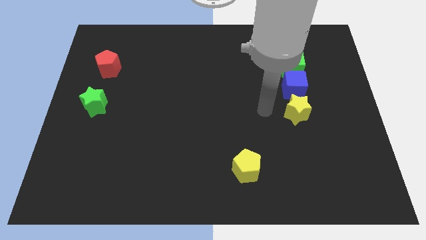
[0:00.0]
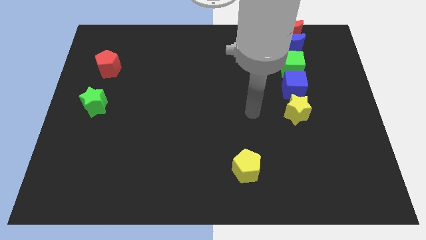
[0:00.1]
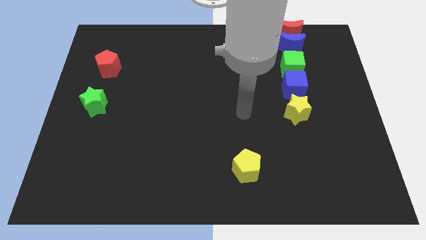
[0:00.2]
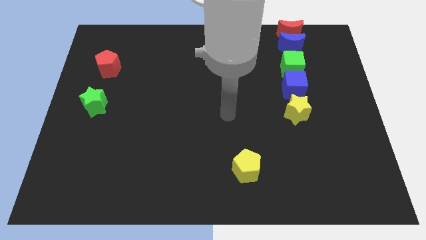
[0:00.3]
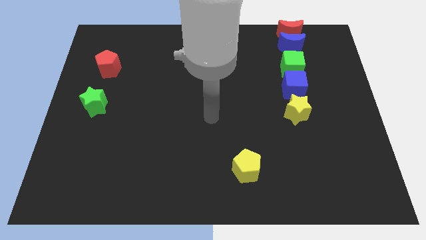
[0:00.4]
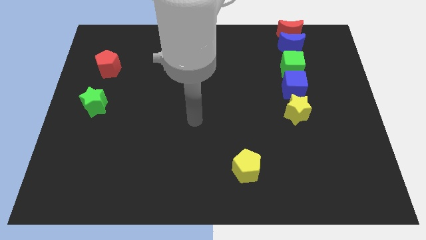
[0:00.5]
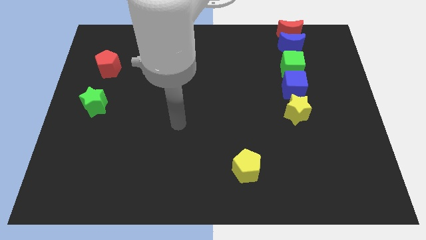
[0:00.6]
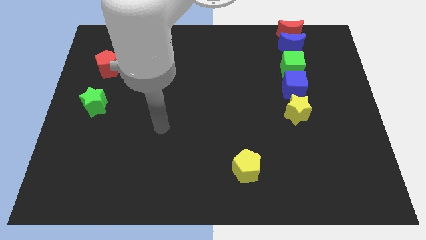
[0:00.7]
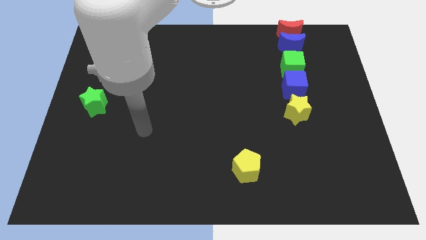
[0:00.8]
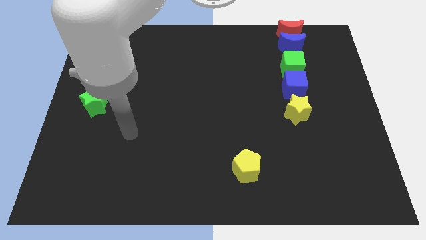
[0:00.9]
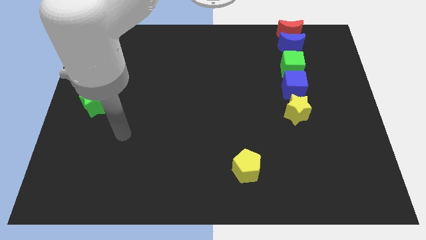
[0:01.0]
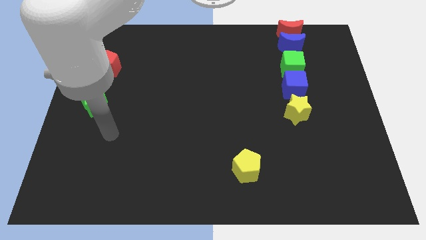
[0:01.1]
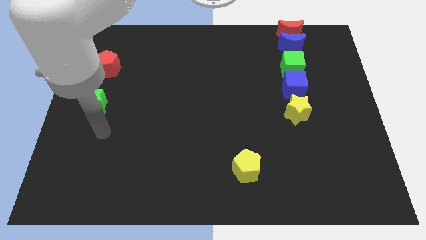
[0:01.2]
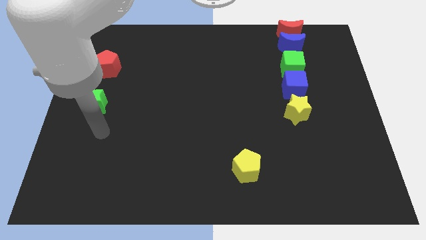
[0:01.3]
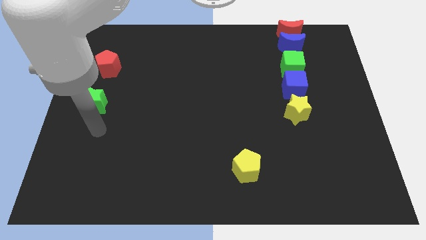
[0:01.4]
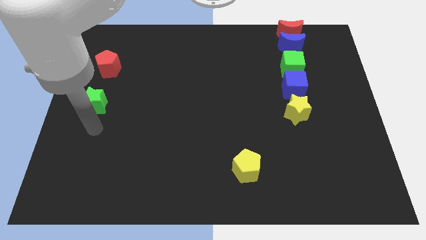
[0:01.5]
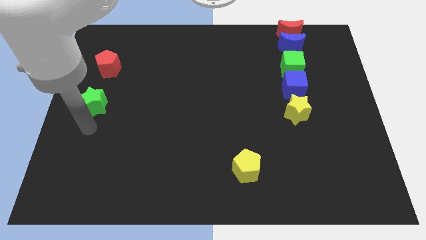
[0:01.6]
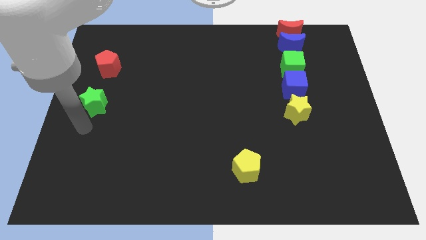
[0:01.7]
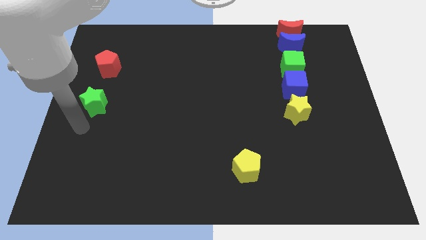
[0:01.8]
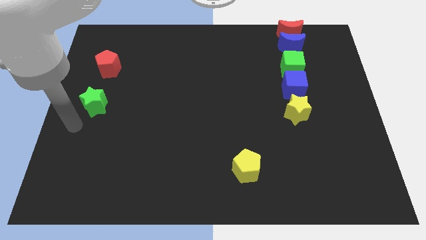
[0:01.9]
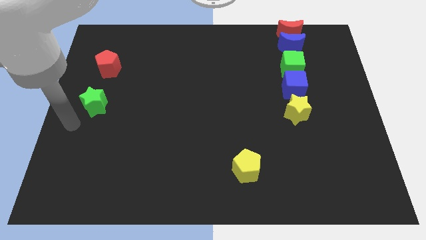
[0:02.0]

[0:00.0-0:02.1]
move your arm to the center left

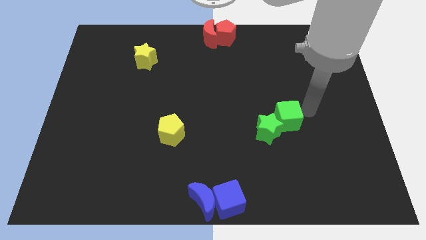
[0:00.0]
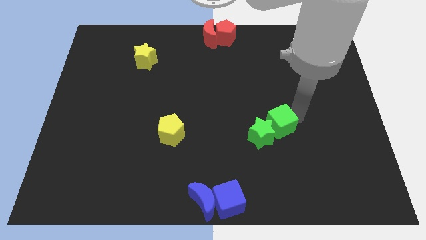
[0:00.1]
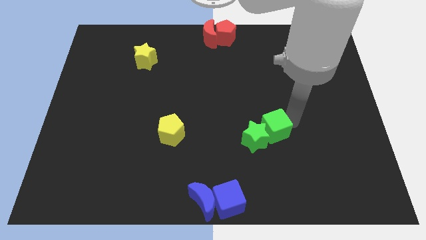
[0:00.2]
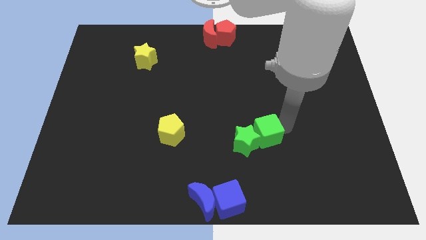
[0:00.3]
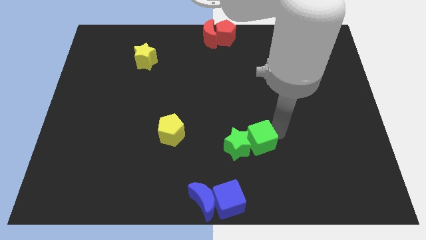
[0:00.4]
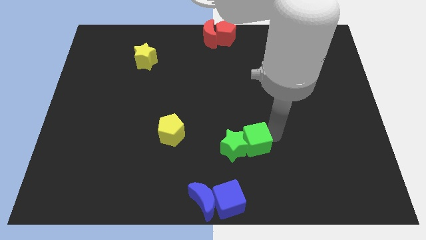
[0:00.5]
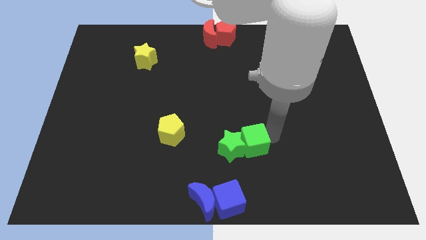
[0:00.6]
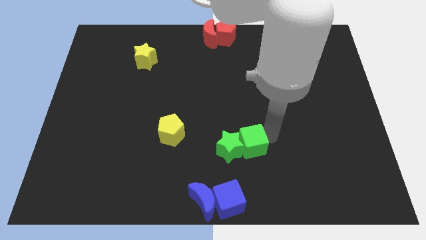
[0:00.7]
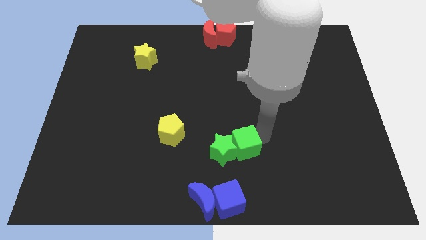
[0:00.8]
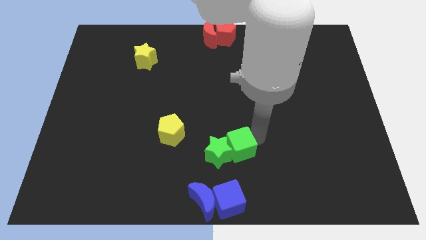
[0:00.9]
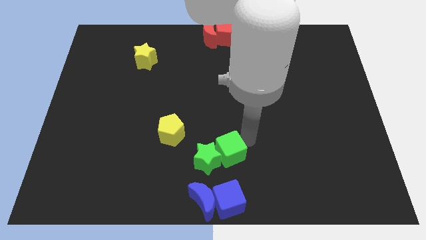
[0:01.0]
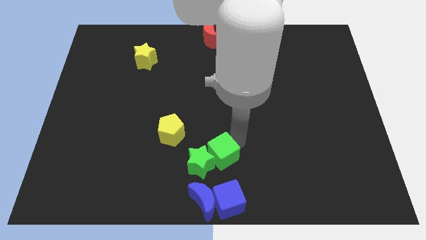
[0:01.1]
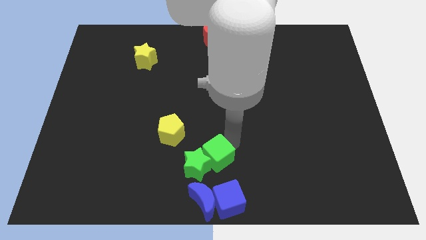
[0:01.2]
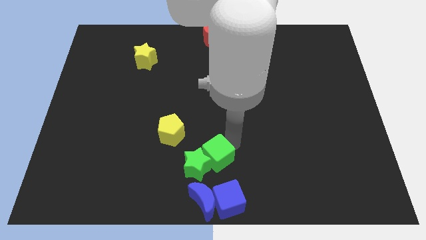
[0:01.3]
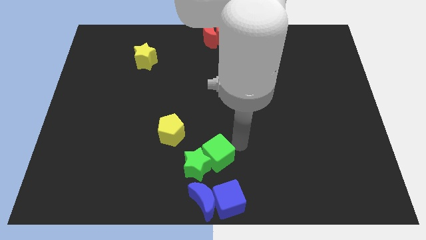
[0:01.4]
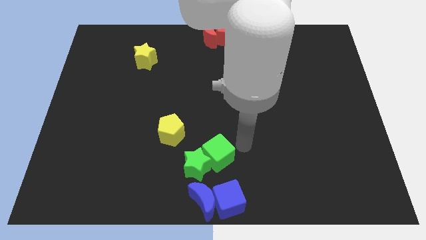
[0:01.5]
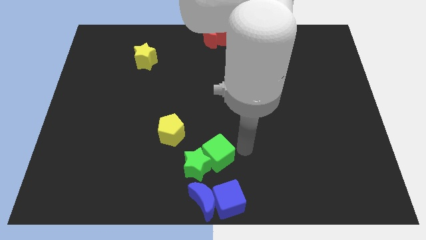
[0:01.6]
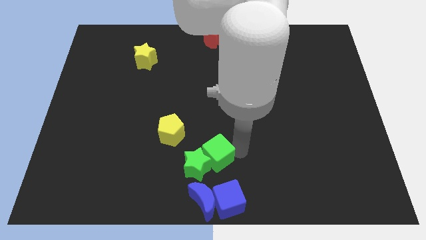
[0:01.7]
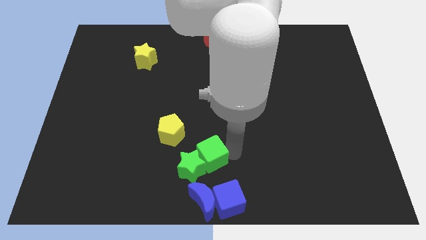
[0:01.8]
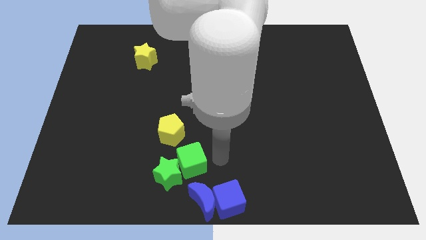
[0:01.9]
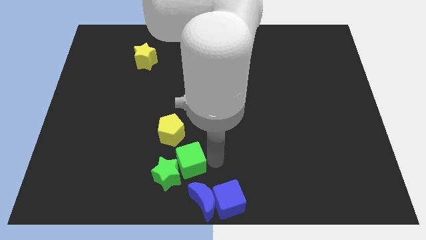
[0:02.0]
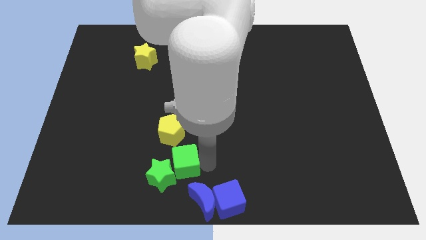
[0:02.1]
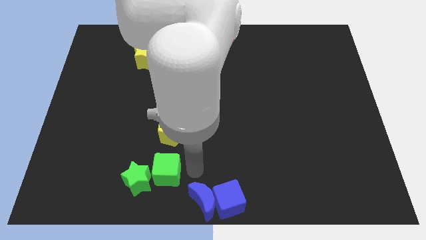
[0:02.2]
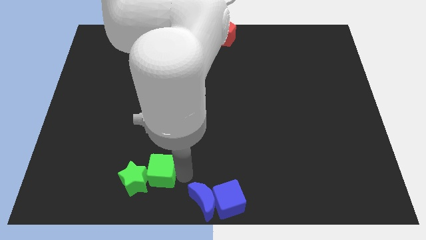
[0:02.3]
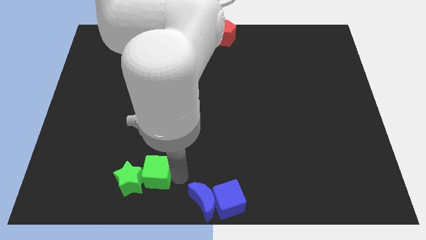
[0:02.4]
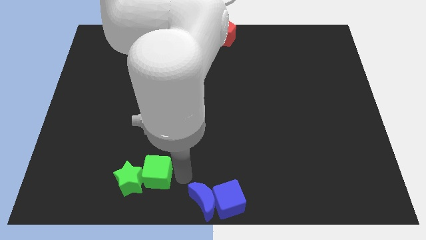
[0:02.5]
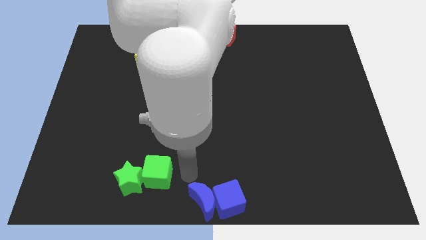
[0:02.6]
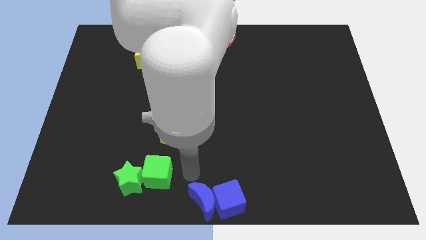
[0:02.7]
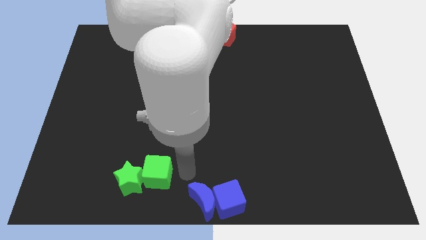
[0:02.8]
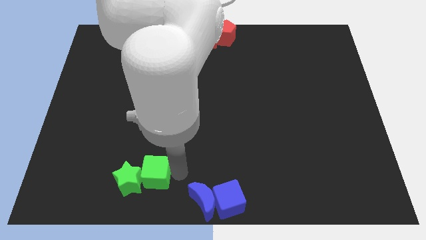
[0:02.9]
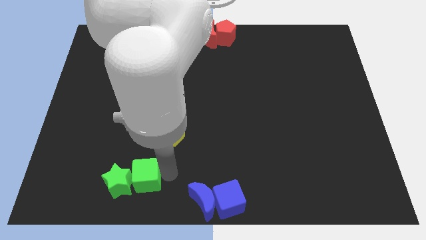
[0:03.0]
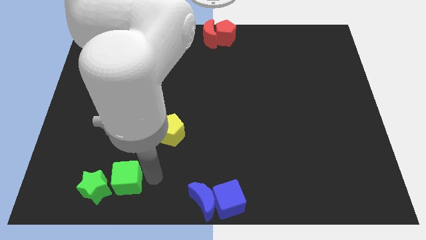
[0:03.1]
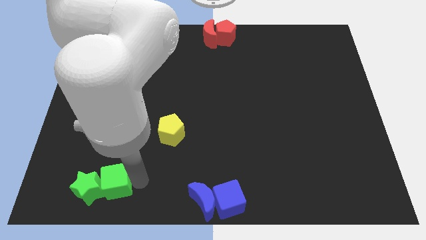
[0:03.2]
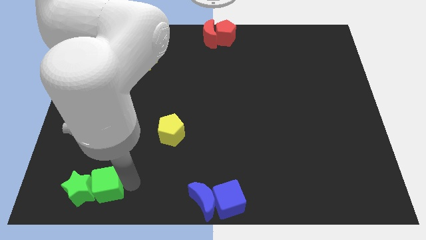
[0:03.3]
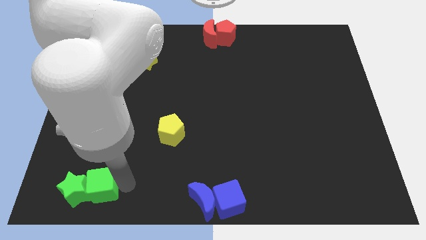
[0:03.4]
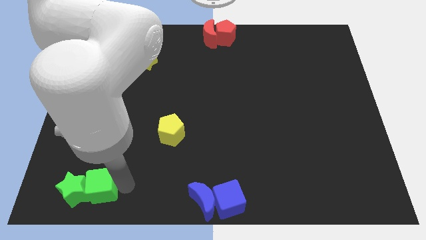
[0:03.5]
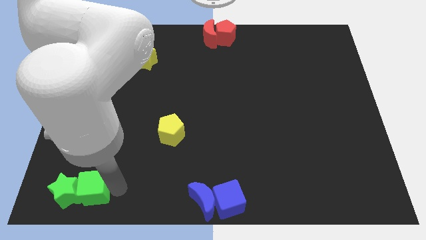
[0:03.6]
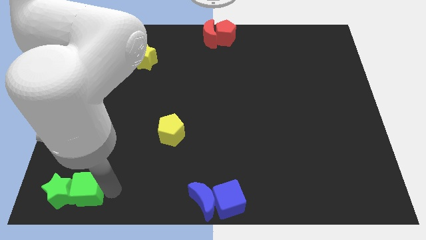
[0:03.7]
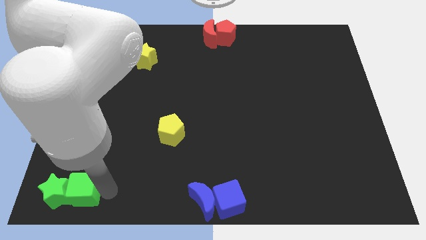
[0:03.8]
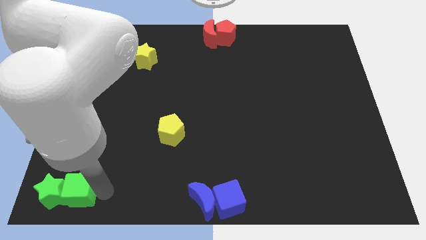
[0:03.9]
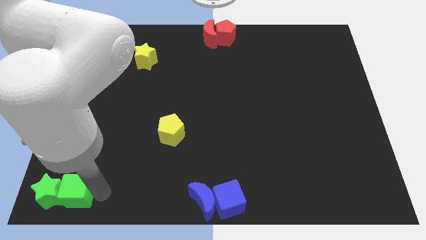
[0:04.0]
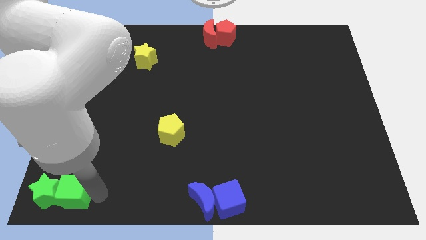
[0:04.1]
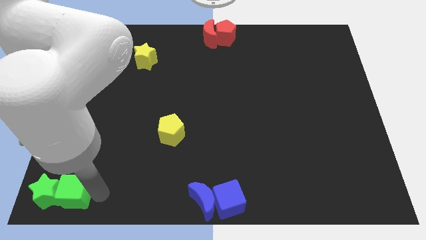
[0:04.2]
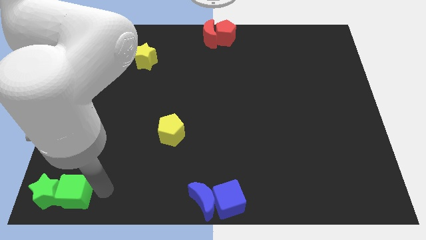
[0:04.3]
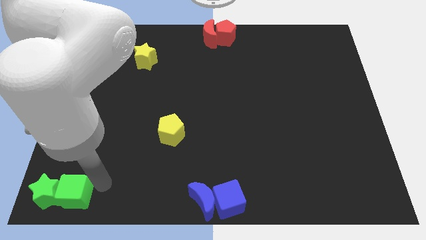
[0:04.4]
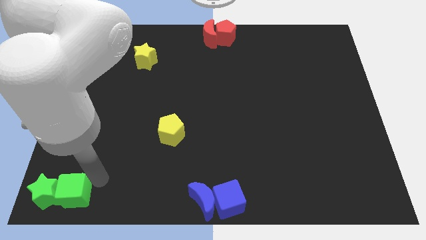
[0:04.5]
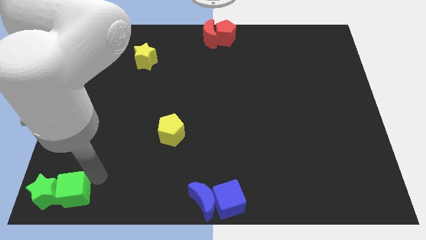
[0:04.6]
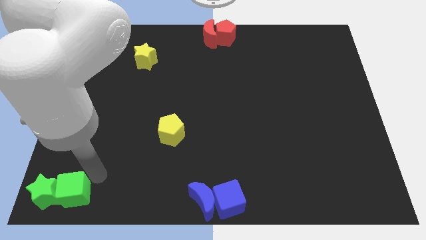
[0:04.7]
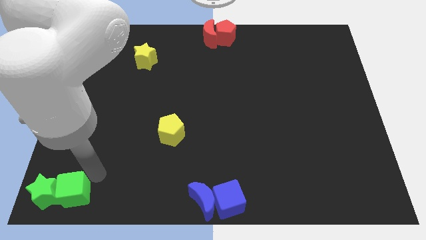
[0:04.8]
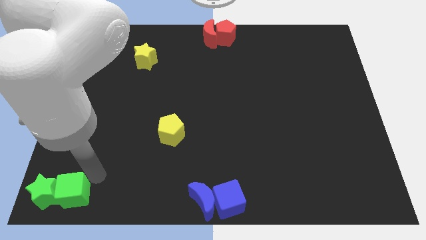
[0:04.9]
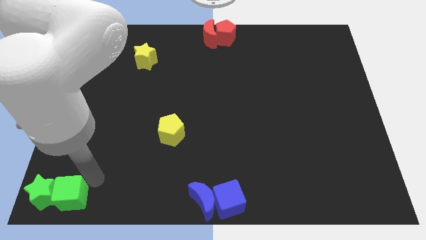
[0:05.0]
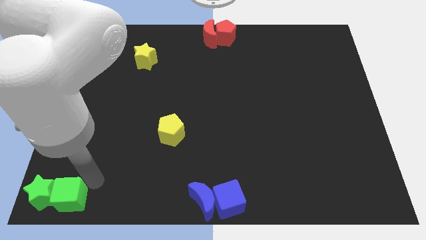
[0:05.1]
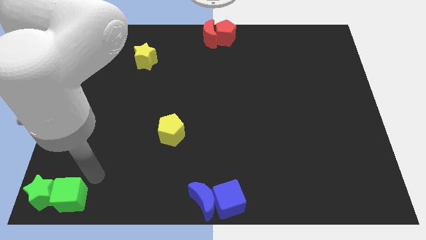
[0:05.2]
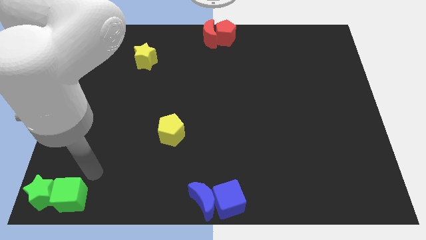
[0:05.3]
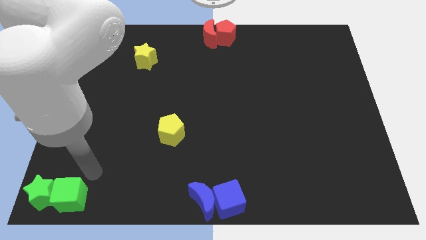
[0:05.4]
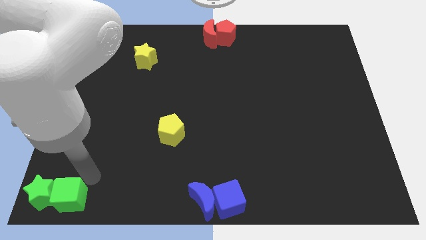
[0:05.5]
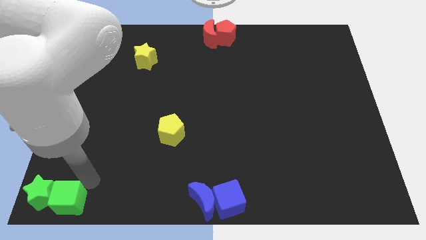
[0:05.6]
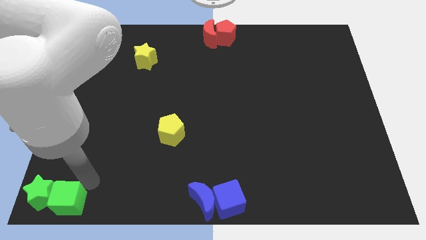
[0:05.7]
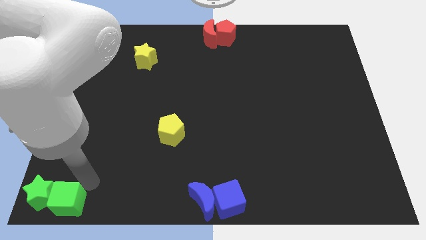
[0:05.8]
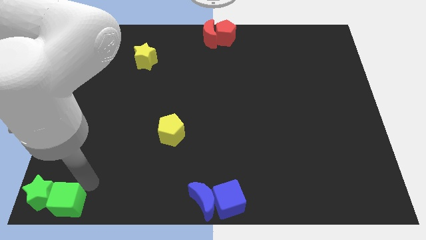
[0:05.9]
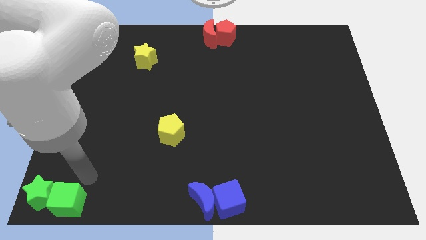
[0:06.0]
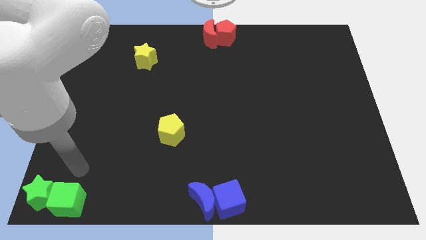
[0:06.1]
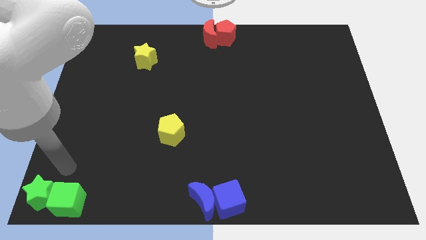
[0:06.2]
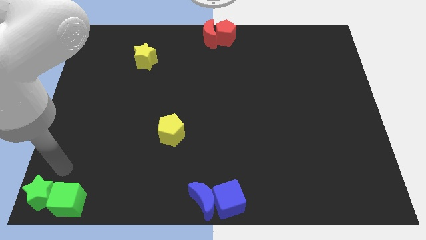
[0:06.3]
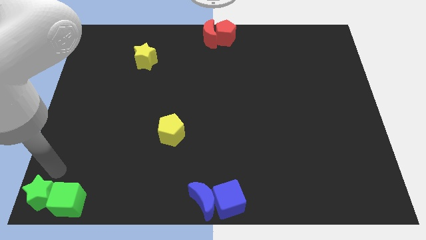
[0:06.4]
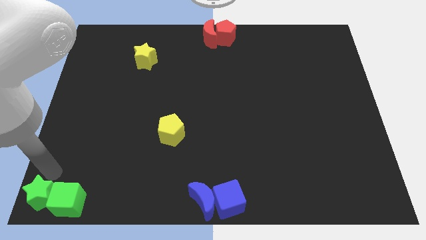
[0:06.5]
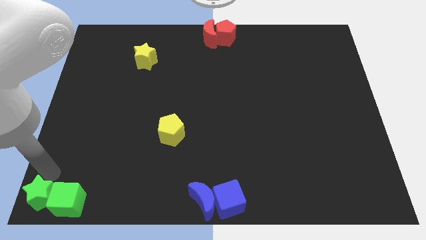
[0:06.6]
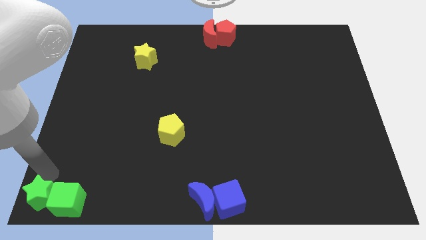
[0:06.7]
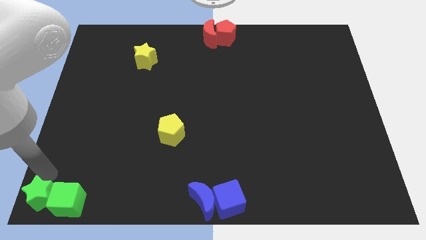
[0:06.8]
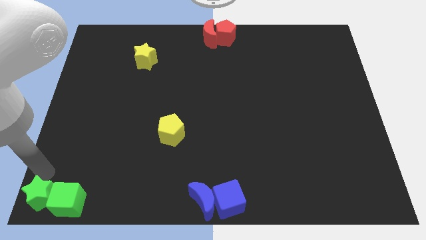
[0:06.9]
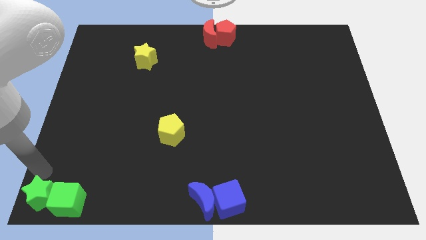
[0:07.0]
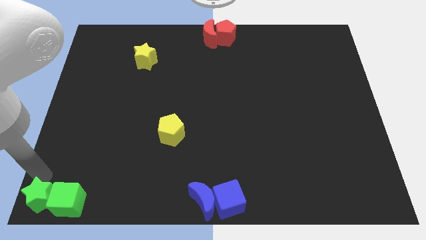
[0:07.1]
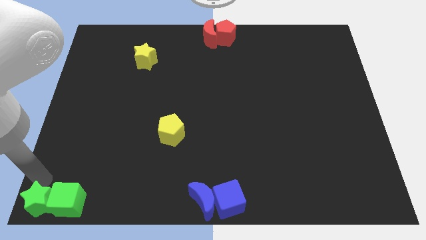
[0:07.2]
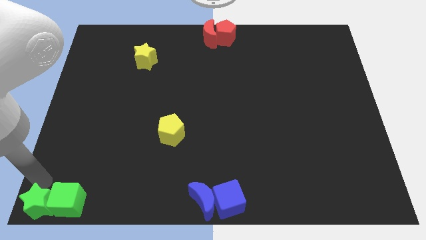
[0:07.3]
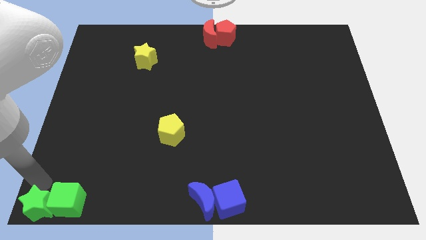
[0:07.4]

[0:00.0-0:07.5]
move the green star and green cube to the bottom left
